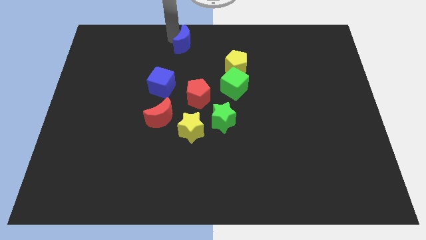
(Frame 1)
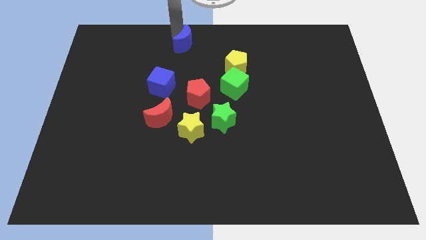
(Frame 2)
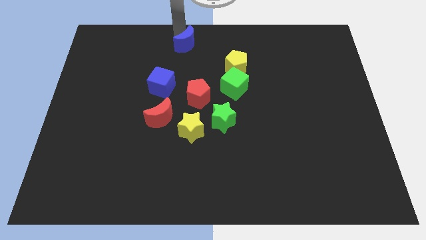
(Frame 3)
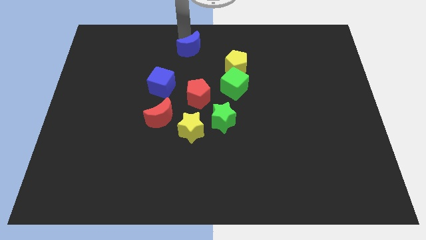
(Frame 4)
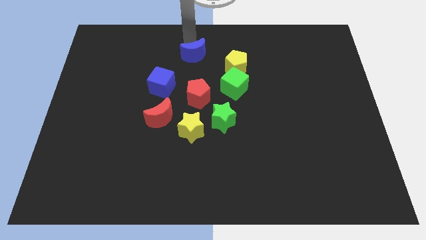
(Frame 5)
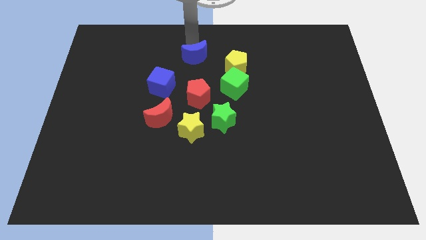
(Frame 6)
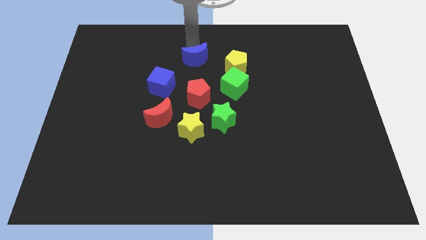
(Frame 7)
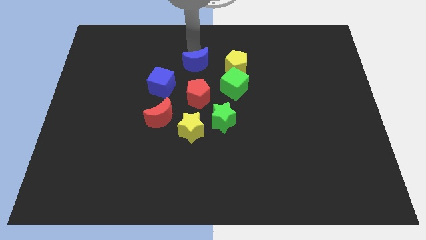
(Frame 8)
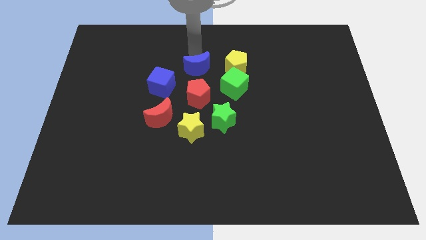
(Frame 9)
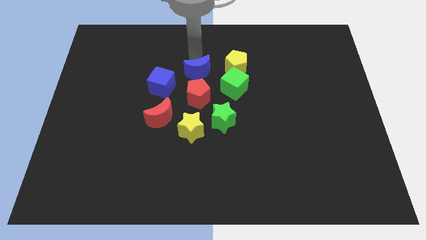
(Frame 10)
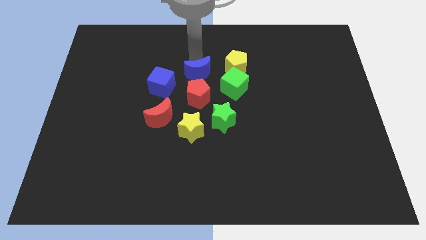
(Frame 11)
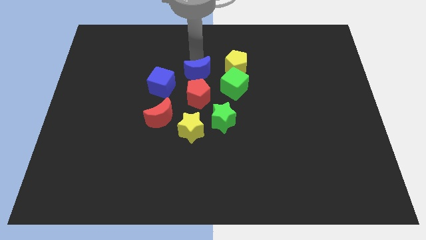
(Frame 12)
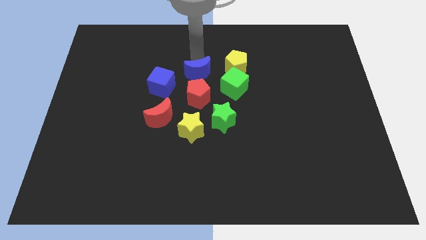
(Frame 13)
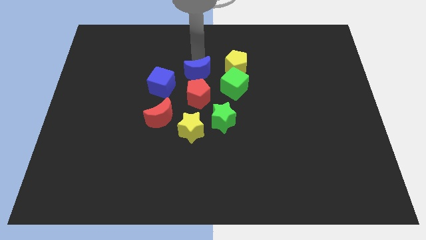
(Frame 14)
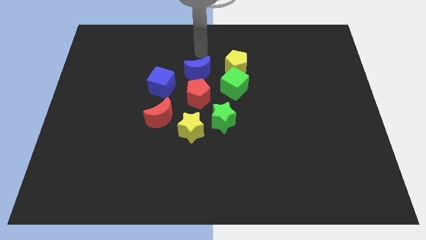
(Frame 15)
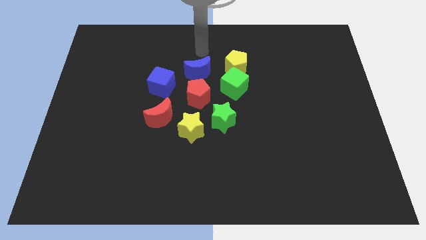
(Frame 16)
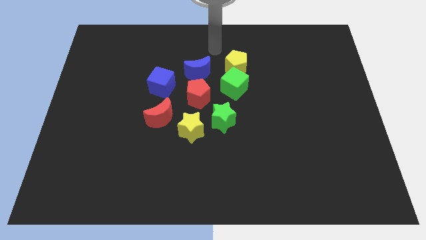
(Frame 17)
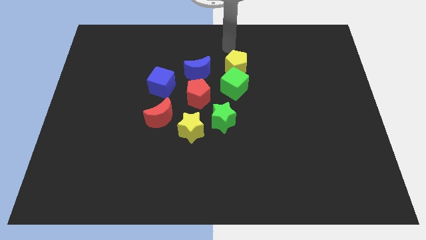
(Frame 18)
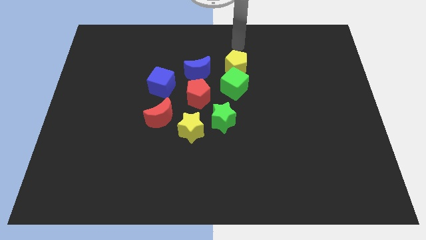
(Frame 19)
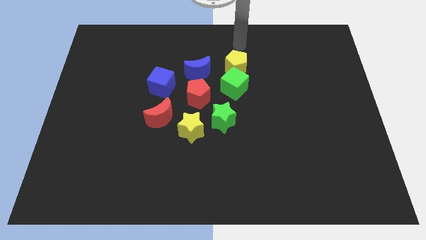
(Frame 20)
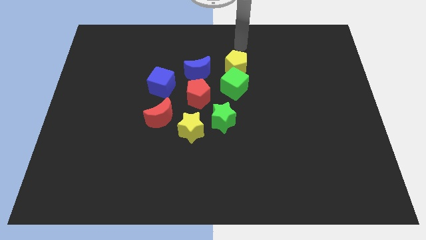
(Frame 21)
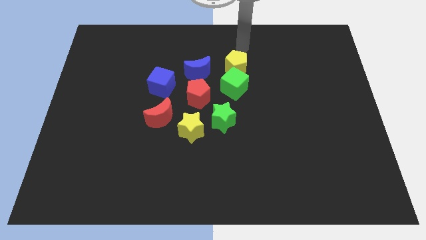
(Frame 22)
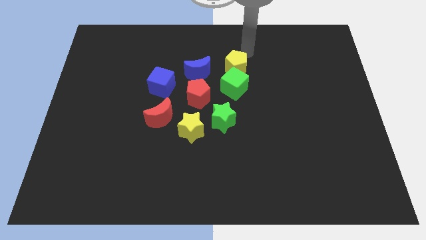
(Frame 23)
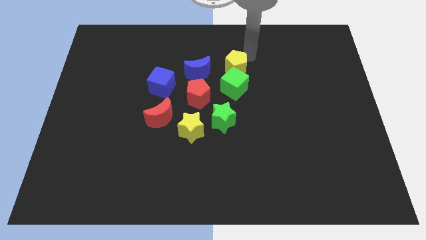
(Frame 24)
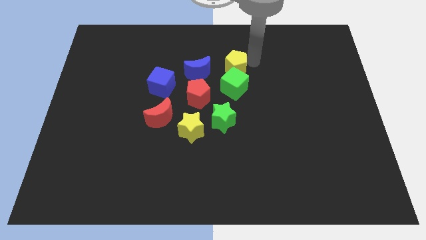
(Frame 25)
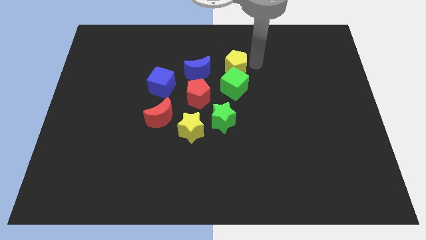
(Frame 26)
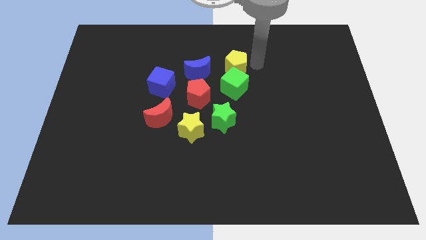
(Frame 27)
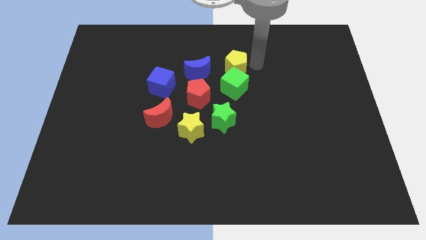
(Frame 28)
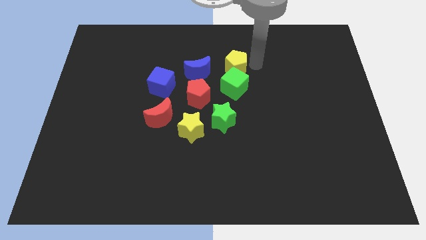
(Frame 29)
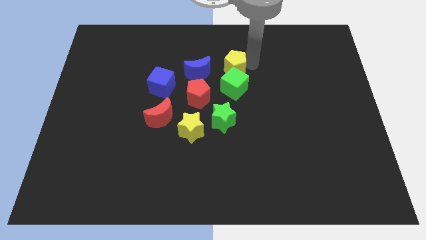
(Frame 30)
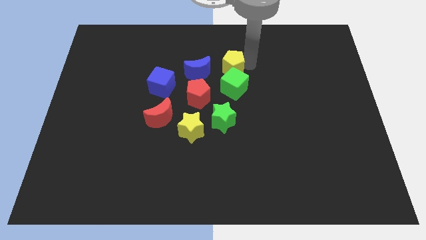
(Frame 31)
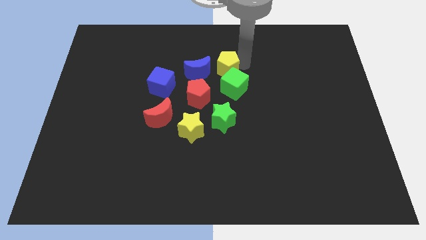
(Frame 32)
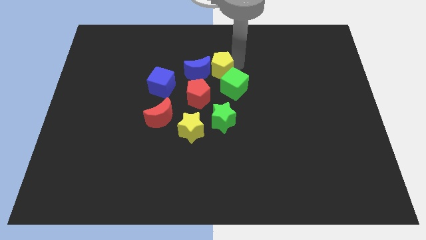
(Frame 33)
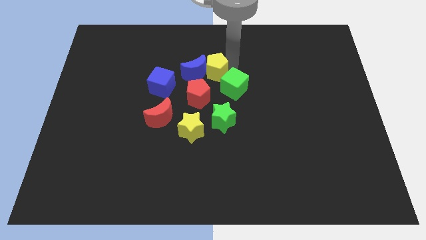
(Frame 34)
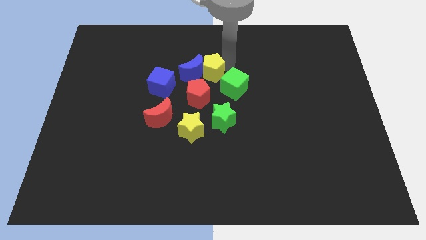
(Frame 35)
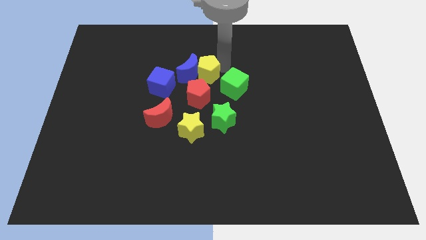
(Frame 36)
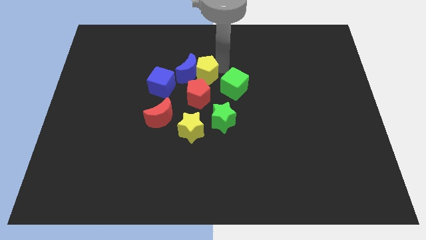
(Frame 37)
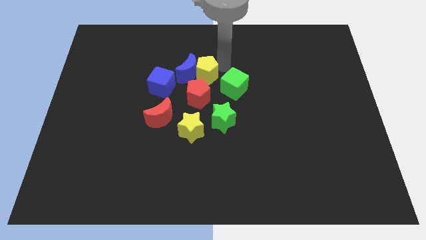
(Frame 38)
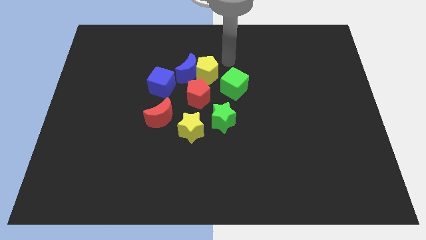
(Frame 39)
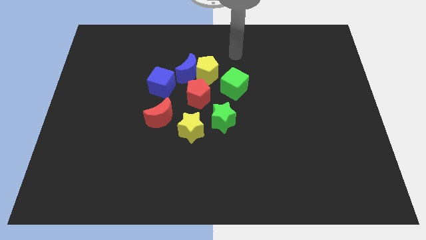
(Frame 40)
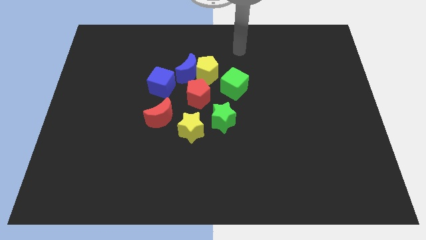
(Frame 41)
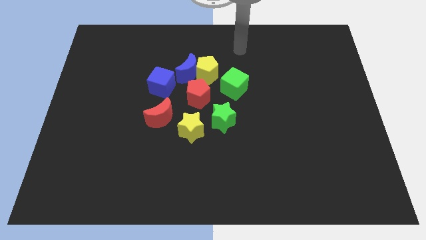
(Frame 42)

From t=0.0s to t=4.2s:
move the blue crescent and yellow pentagon together at the top side of the red pentagon

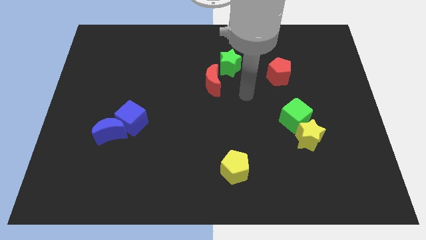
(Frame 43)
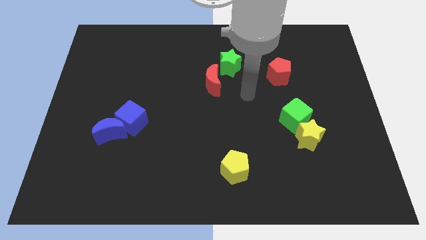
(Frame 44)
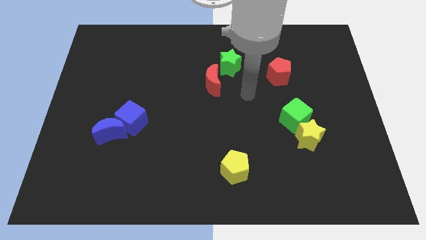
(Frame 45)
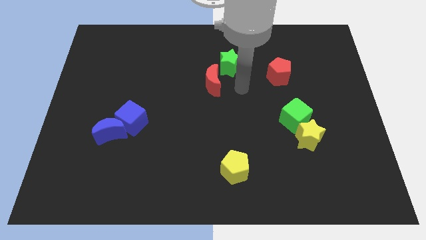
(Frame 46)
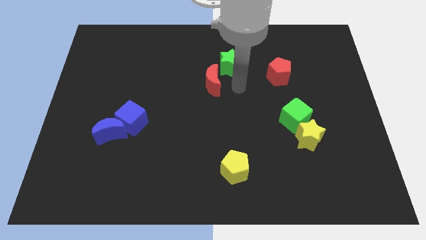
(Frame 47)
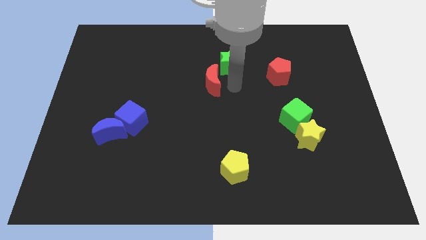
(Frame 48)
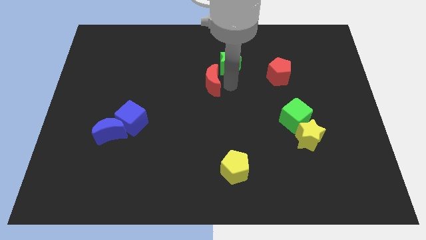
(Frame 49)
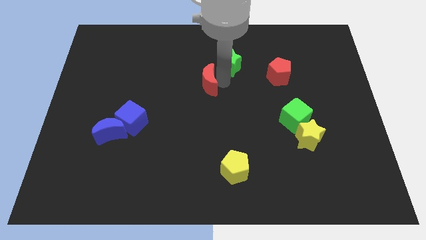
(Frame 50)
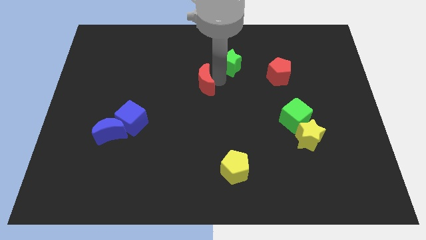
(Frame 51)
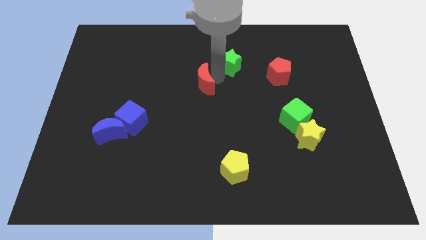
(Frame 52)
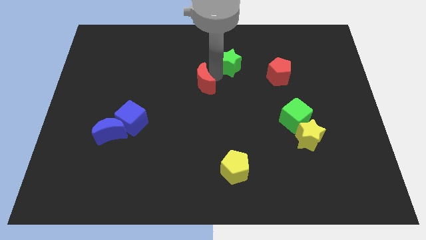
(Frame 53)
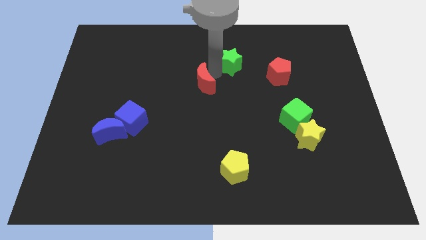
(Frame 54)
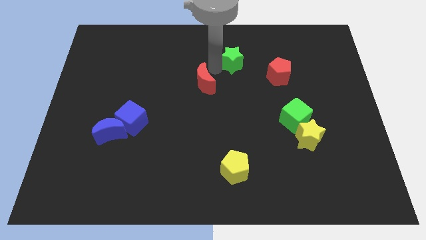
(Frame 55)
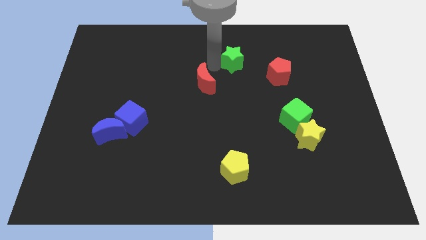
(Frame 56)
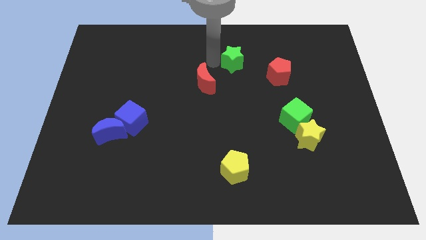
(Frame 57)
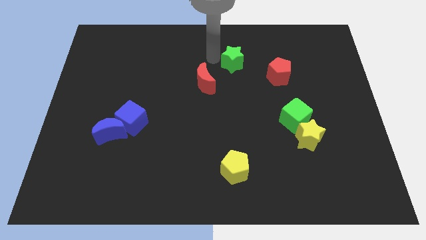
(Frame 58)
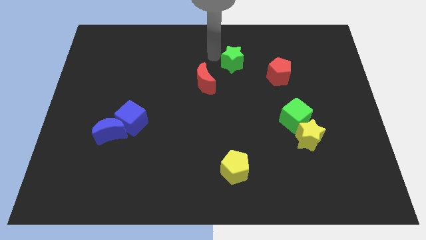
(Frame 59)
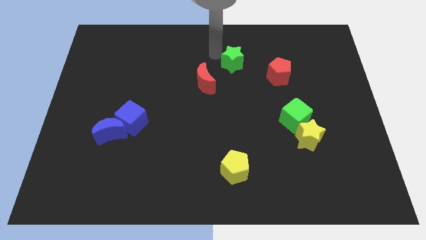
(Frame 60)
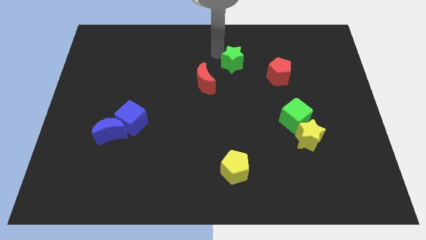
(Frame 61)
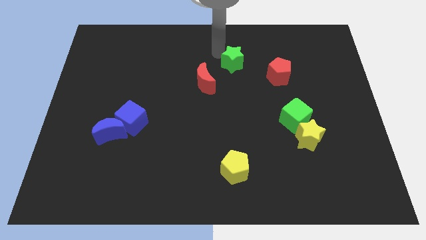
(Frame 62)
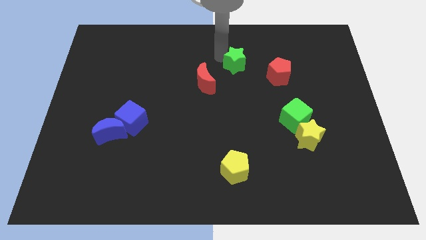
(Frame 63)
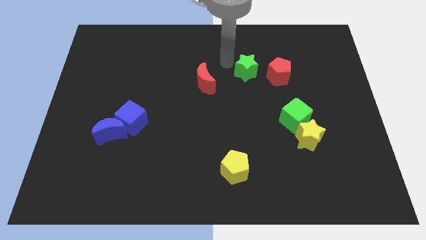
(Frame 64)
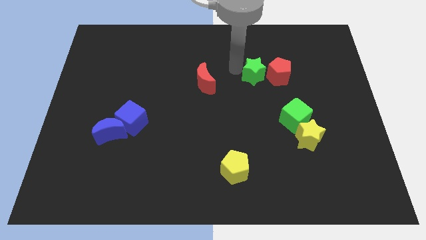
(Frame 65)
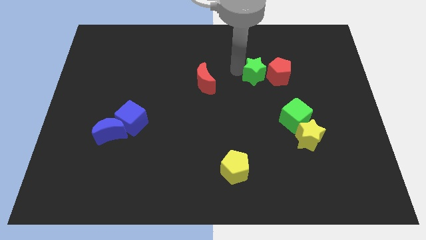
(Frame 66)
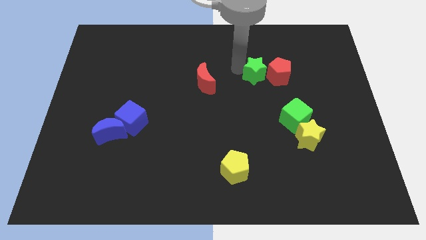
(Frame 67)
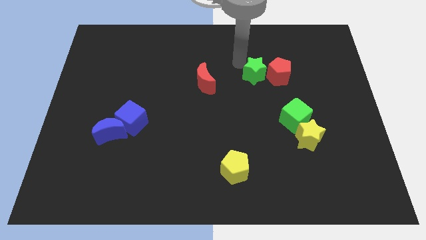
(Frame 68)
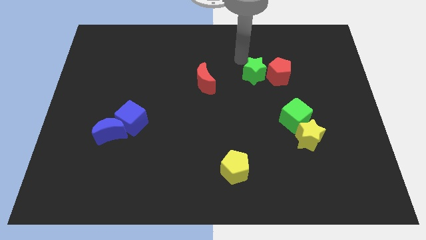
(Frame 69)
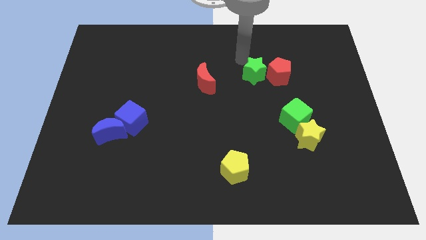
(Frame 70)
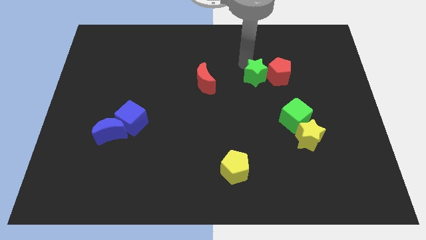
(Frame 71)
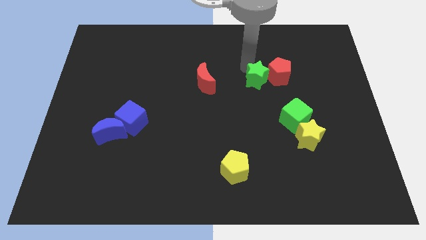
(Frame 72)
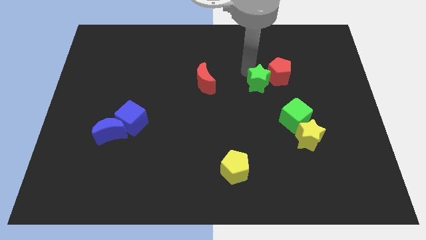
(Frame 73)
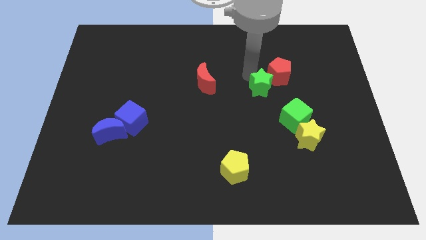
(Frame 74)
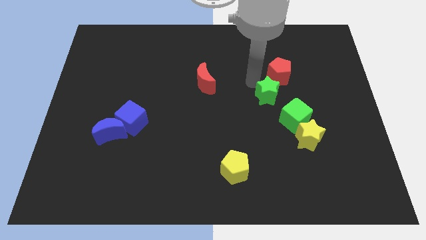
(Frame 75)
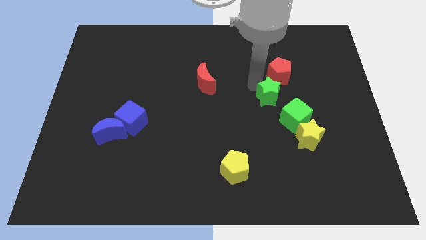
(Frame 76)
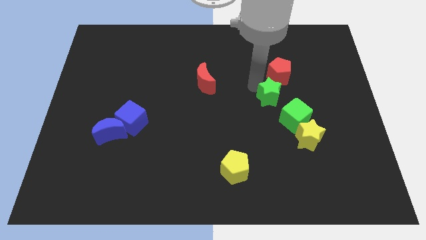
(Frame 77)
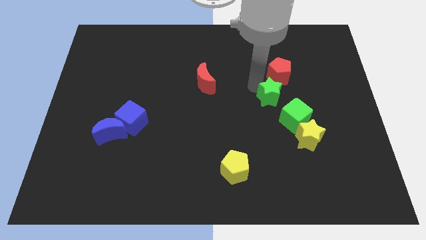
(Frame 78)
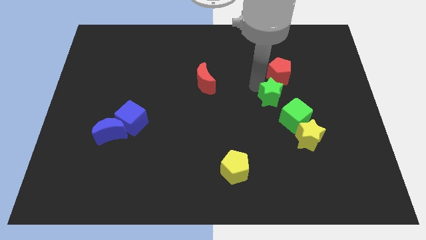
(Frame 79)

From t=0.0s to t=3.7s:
push the green star towards the green cube

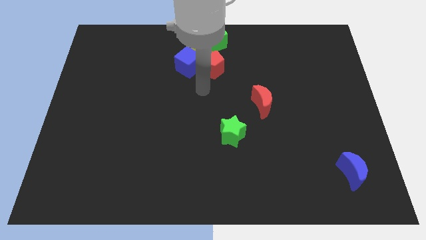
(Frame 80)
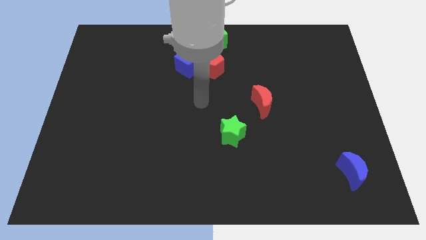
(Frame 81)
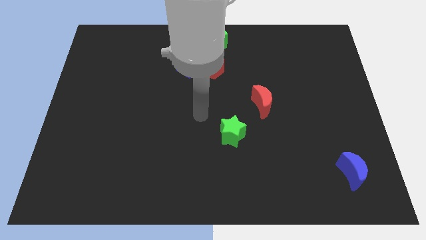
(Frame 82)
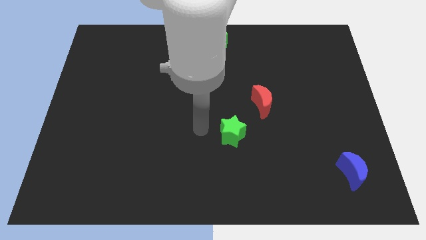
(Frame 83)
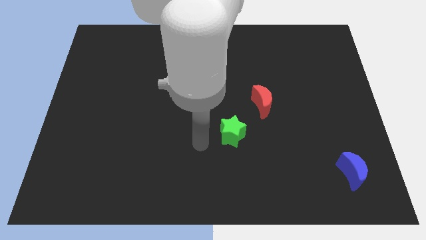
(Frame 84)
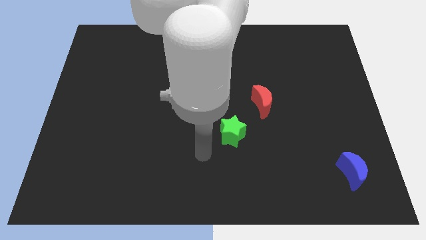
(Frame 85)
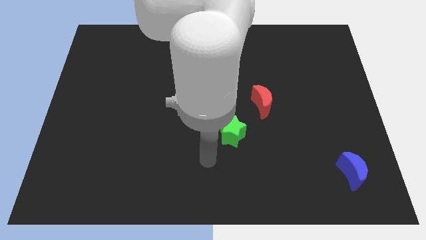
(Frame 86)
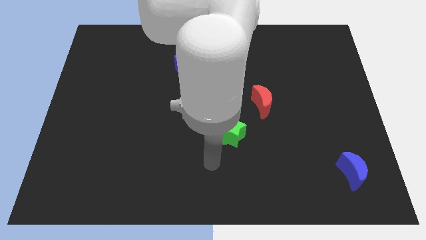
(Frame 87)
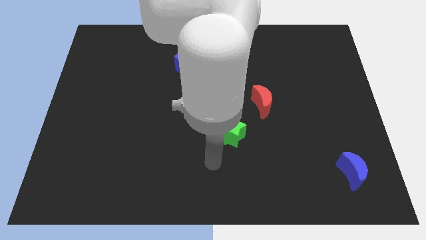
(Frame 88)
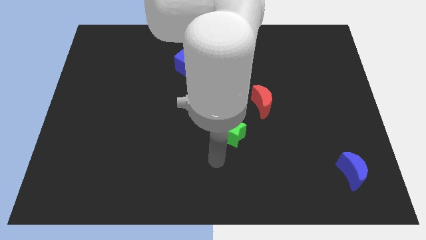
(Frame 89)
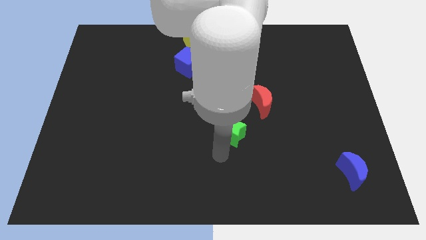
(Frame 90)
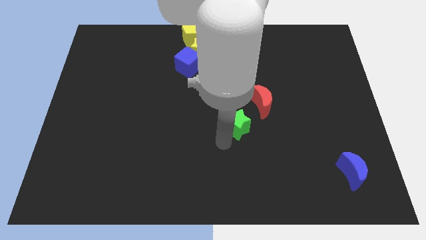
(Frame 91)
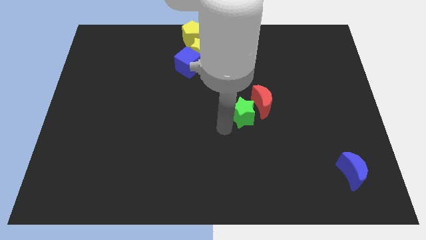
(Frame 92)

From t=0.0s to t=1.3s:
move the green star to the left of the red crescent
